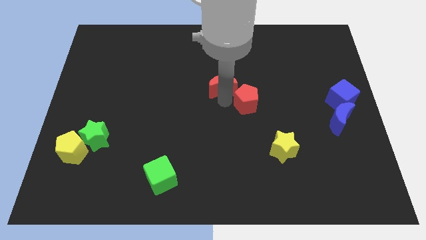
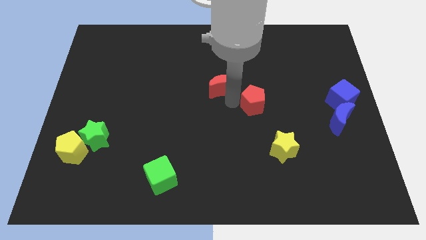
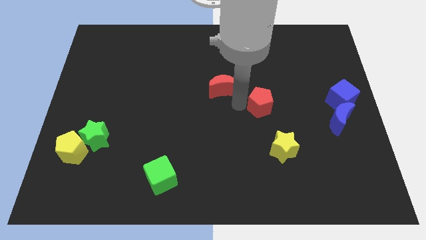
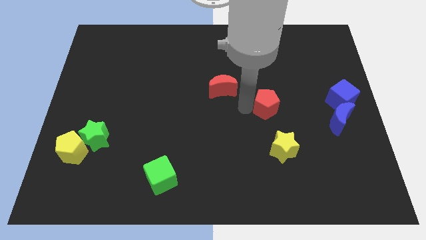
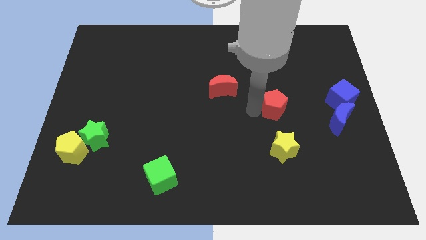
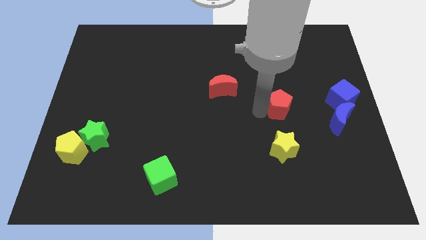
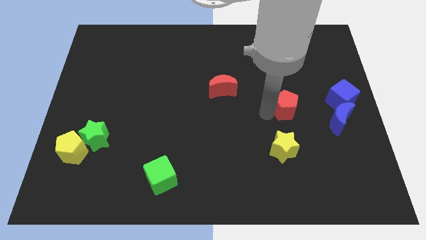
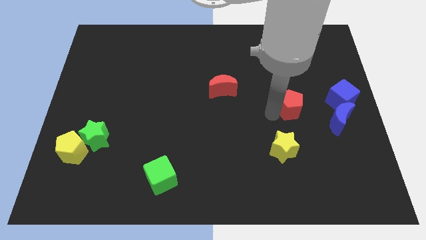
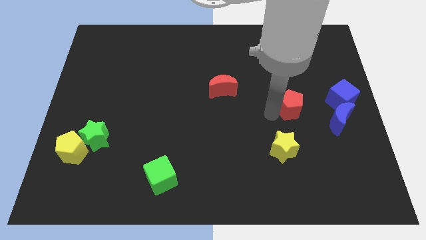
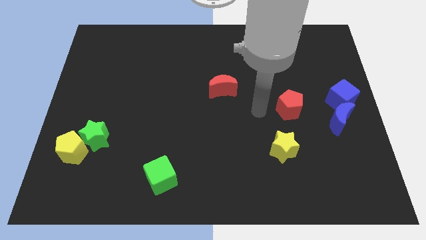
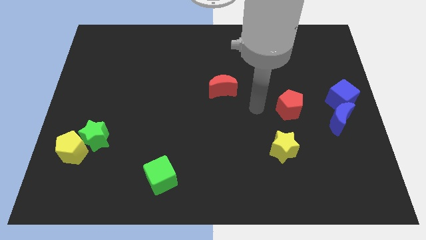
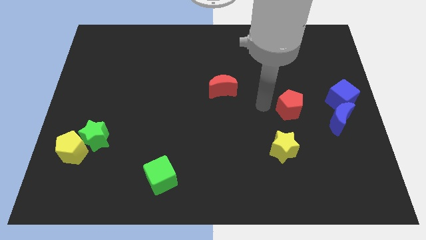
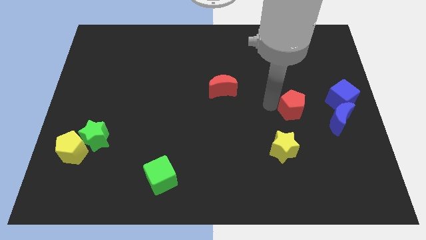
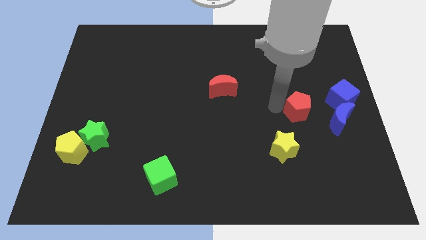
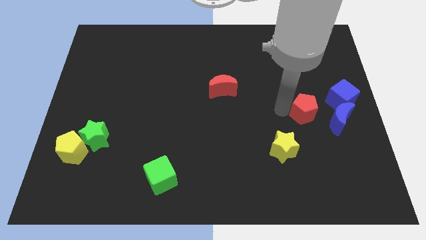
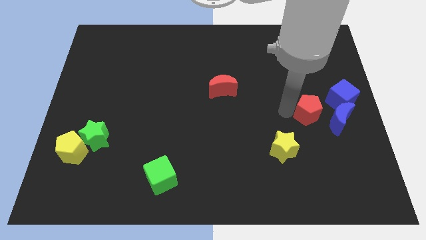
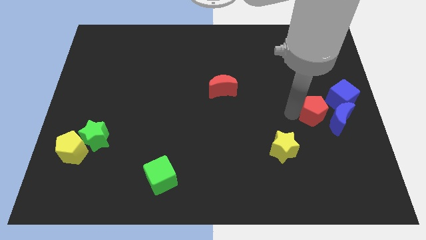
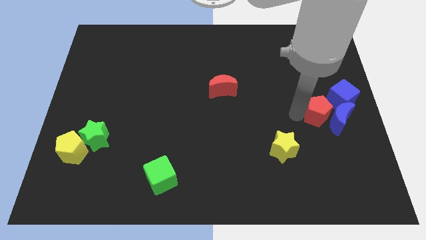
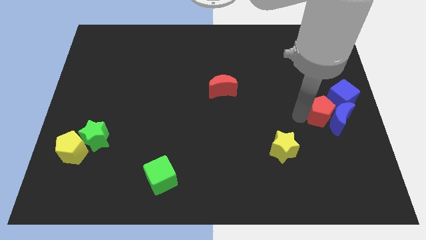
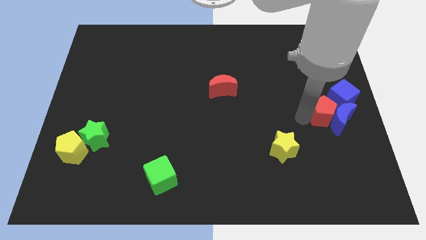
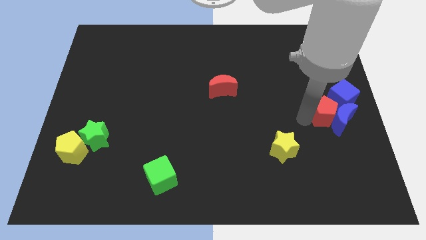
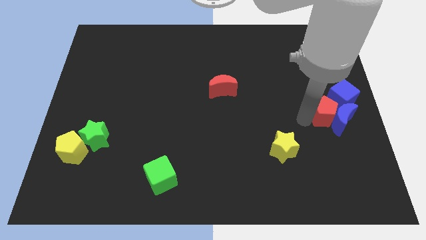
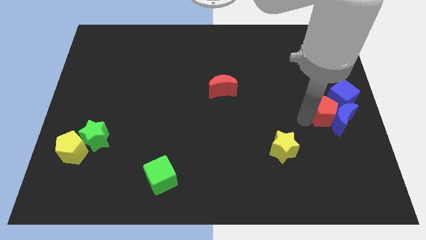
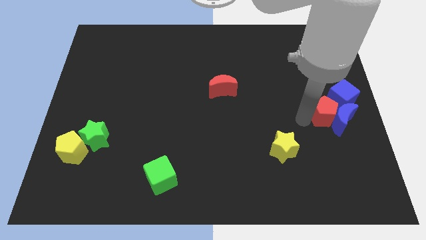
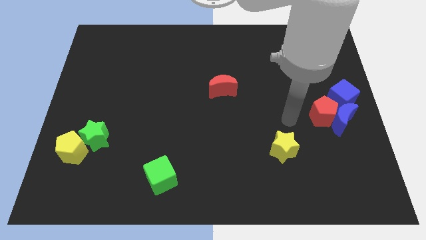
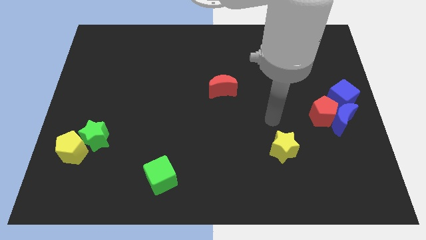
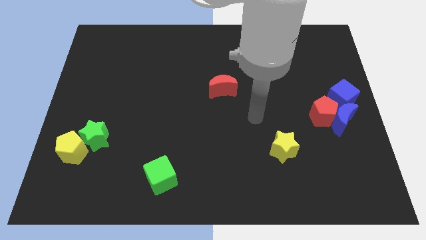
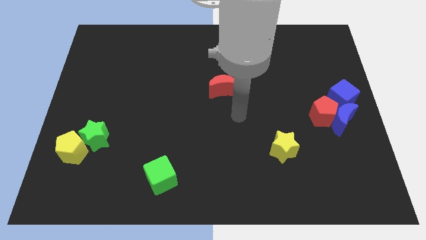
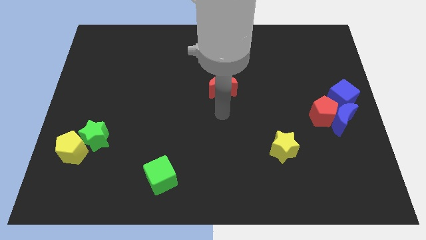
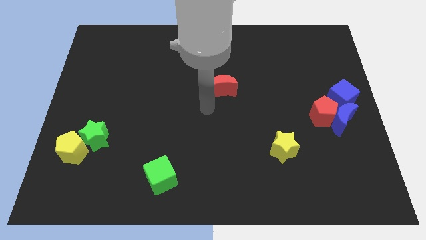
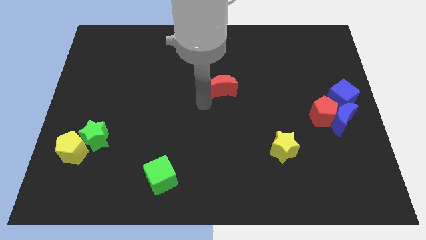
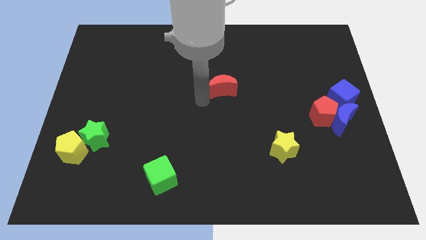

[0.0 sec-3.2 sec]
slide red pentagon into blue moon

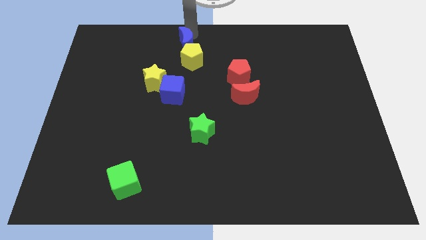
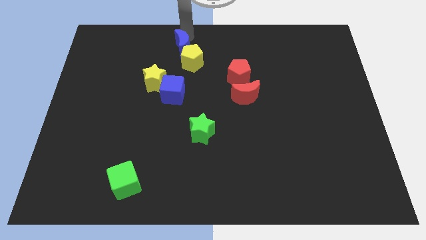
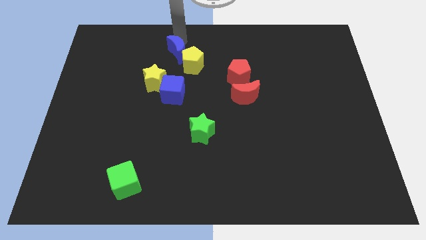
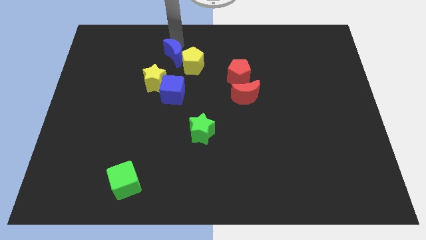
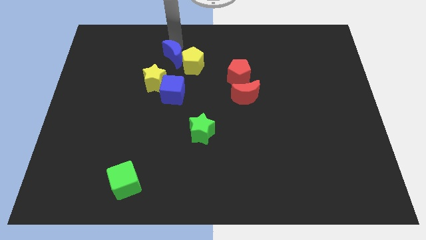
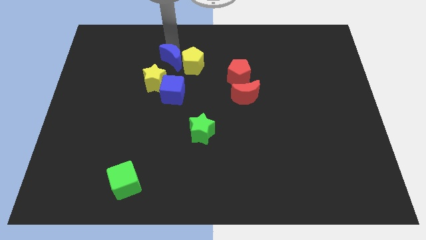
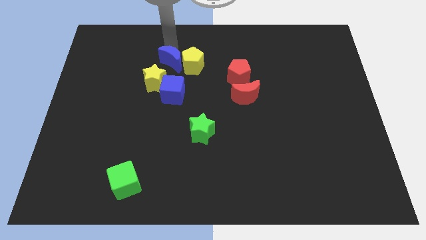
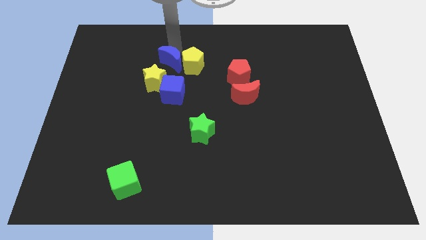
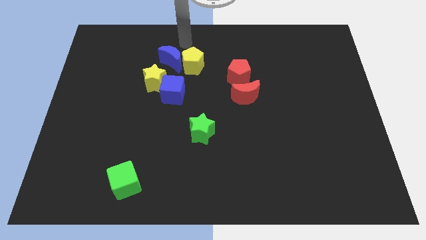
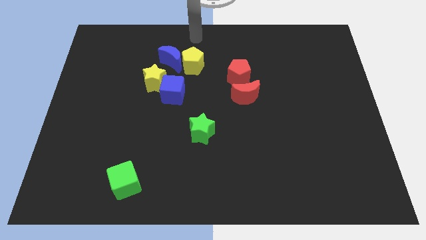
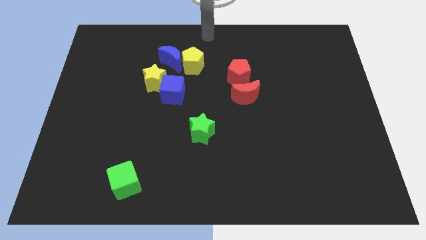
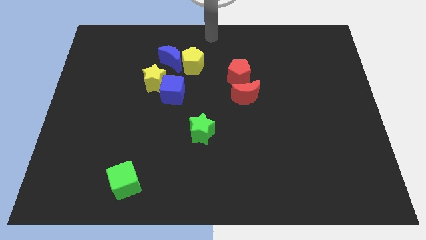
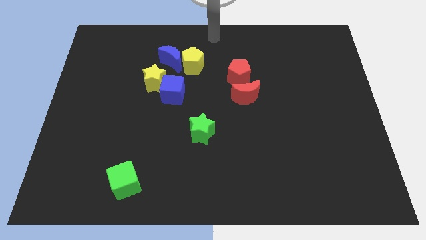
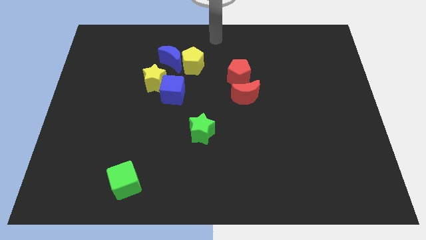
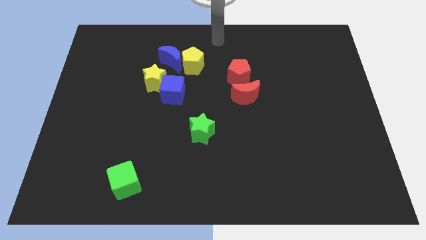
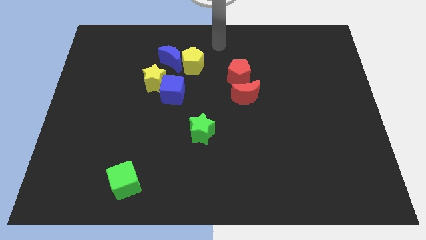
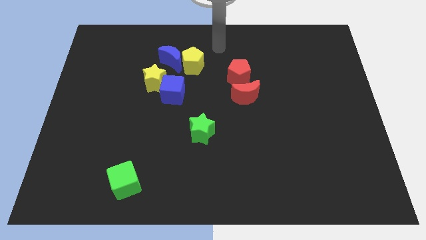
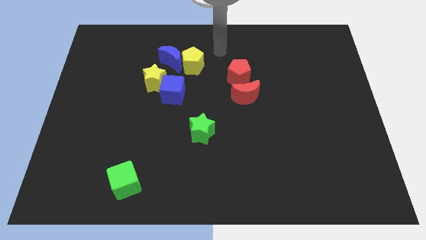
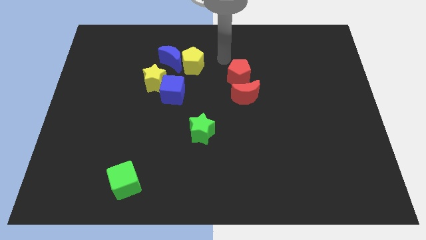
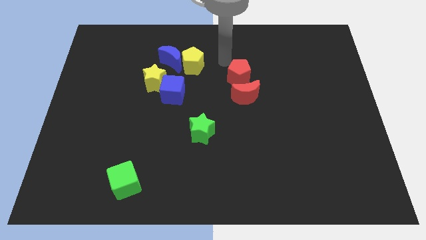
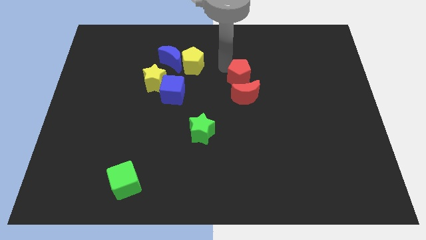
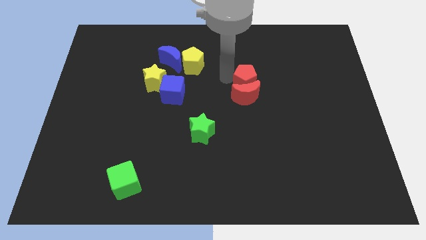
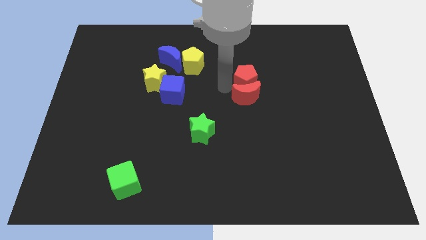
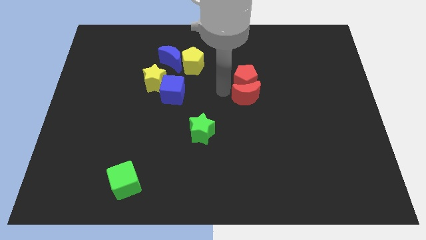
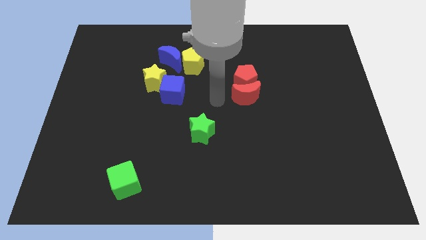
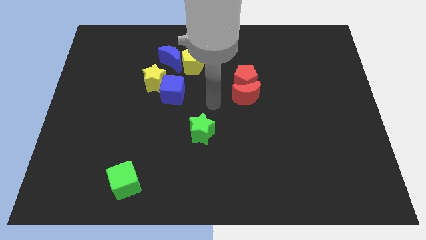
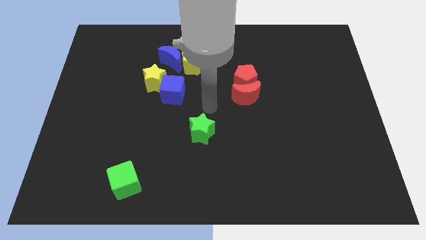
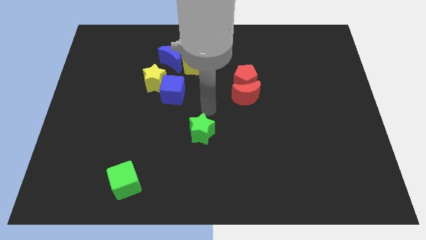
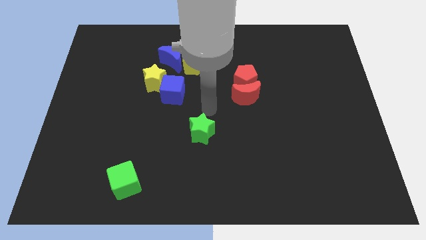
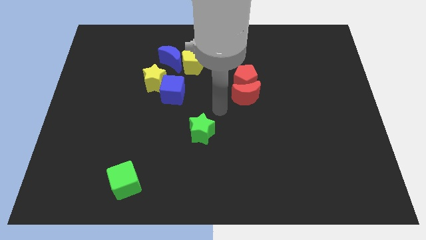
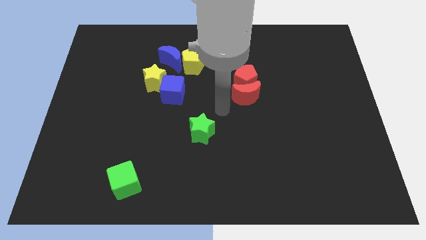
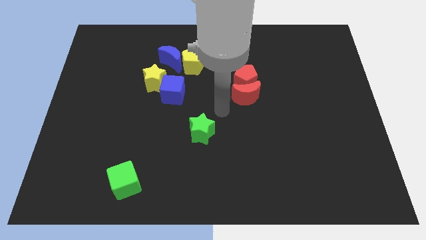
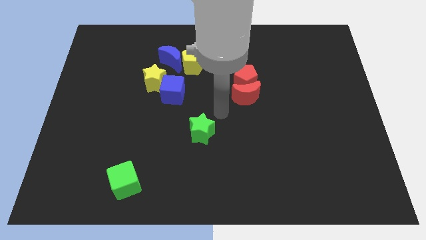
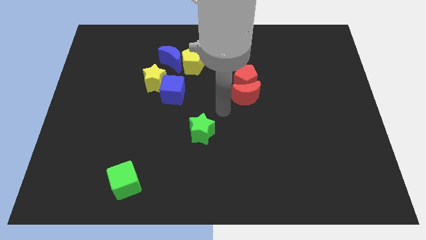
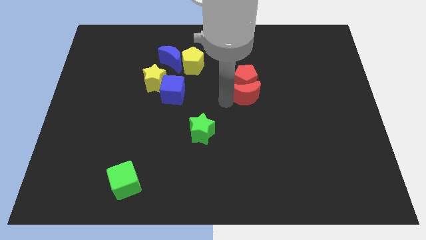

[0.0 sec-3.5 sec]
place your arm left to red moon

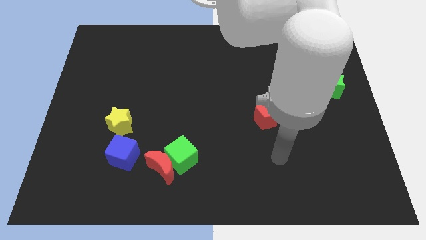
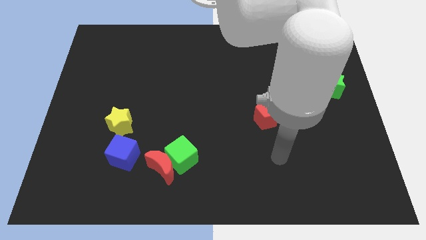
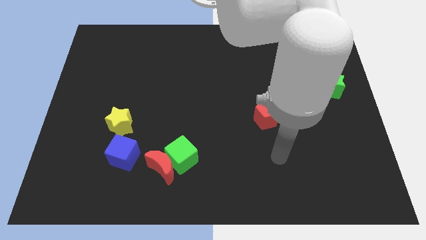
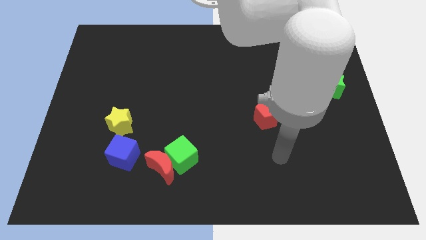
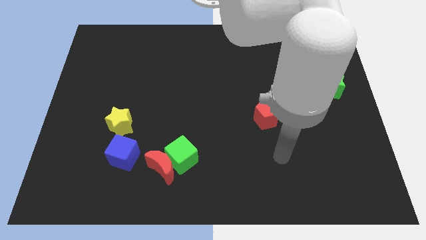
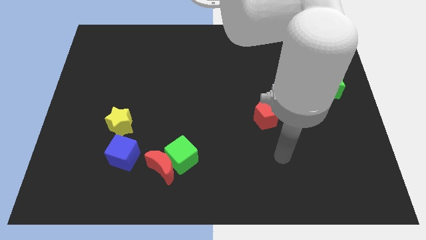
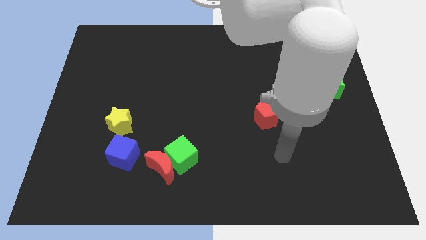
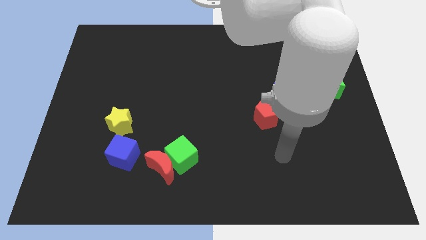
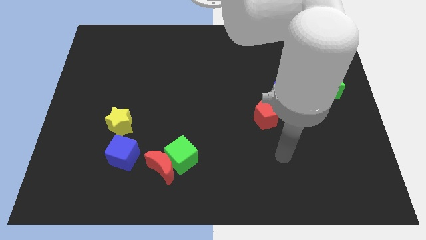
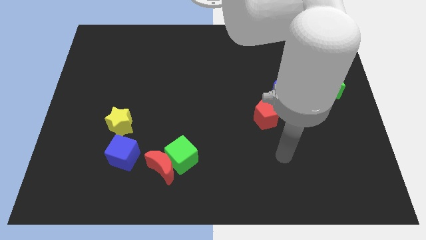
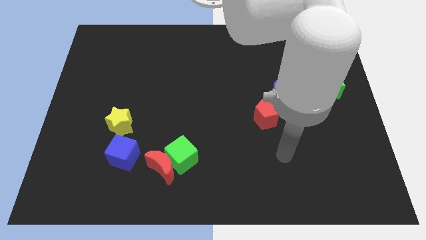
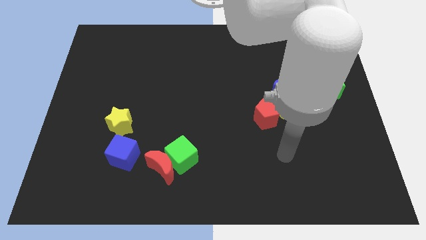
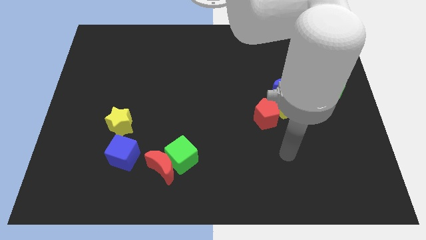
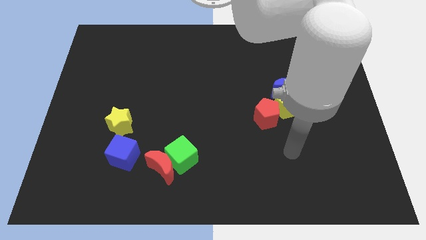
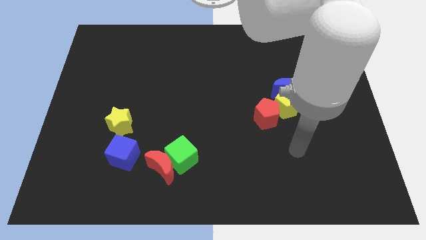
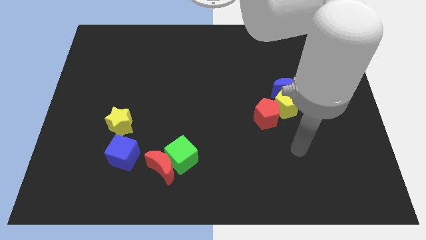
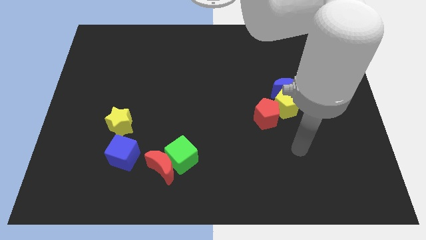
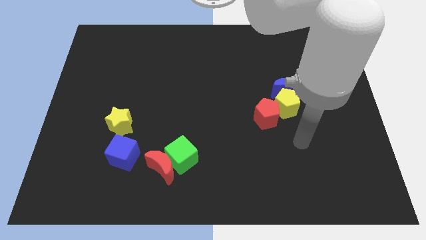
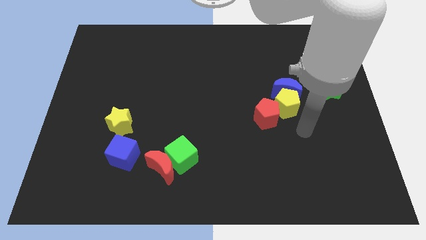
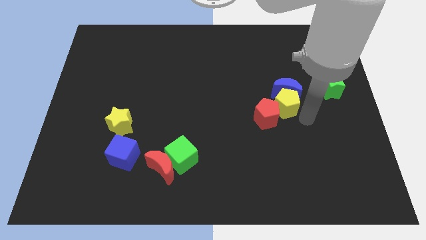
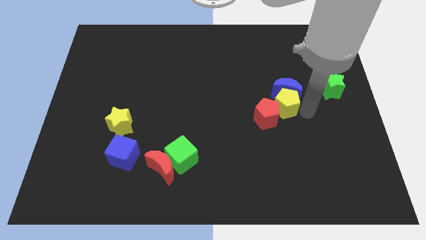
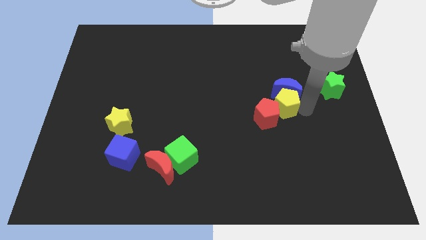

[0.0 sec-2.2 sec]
point your arm to the right of yellow pentagon
